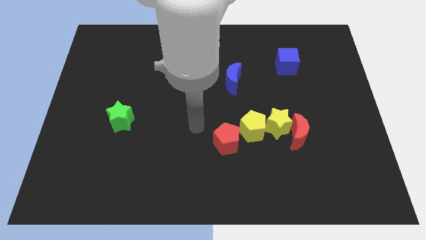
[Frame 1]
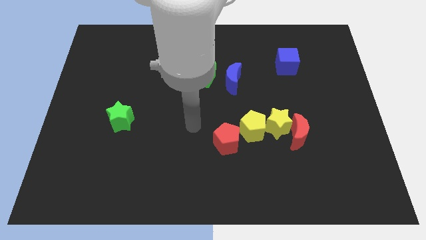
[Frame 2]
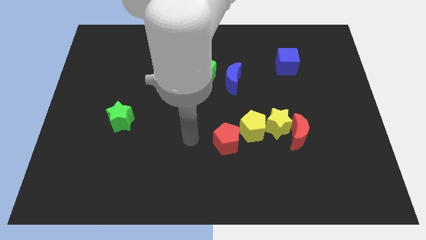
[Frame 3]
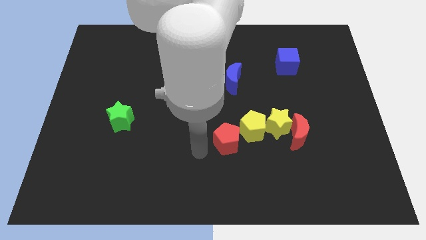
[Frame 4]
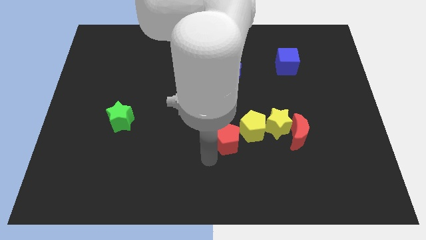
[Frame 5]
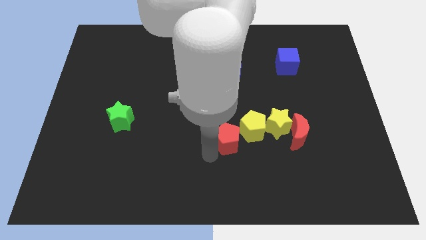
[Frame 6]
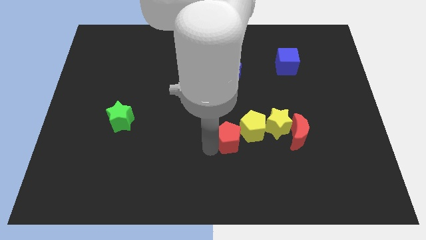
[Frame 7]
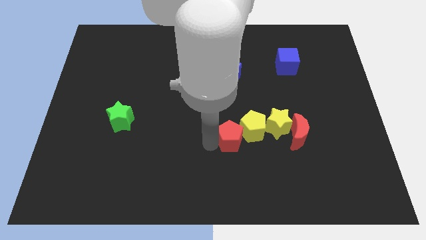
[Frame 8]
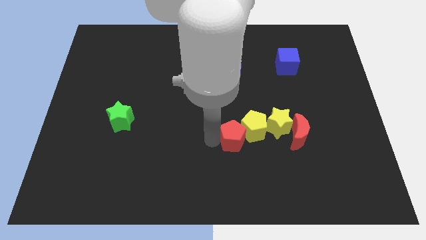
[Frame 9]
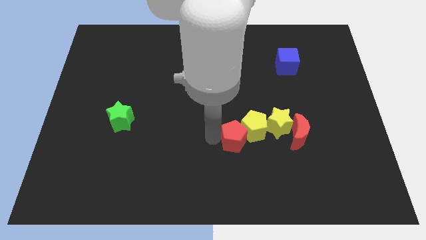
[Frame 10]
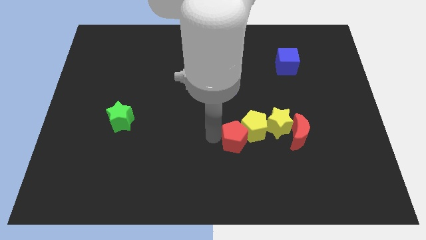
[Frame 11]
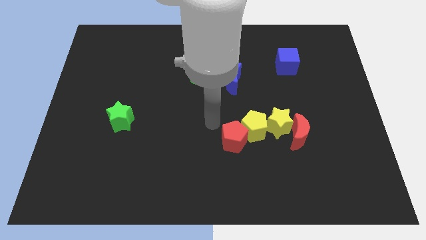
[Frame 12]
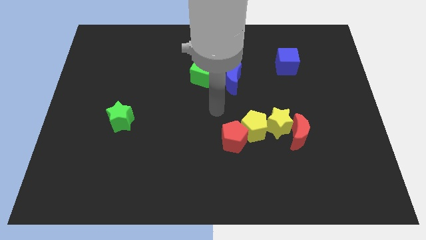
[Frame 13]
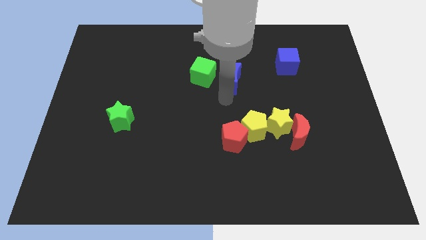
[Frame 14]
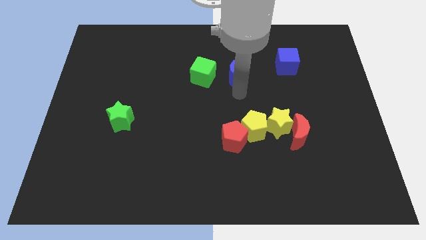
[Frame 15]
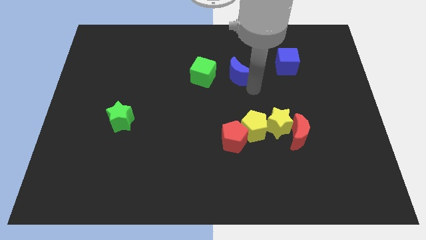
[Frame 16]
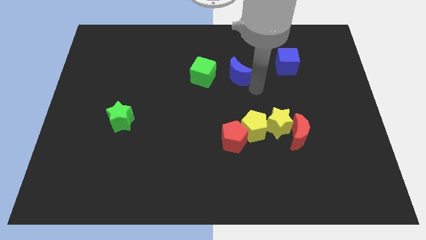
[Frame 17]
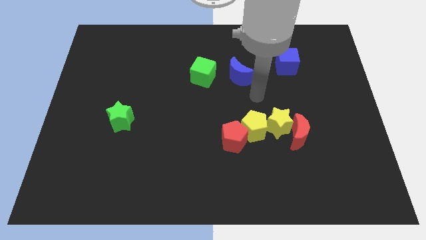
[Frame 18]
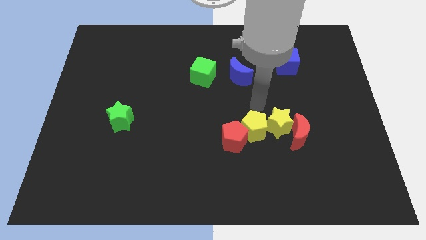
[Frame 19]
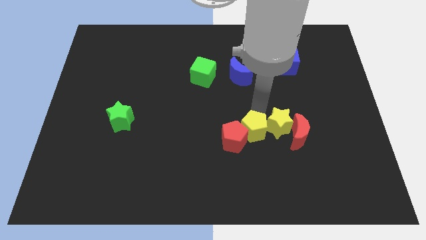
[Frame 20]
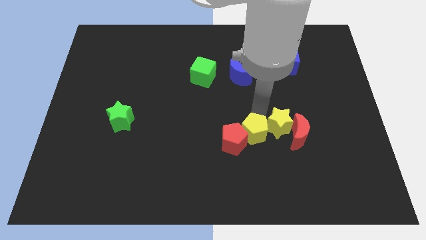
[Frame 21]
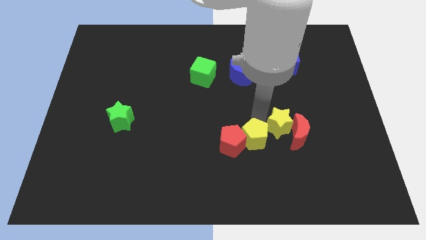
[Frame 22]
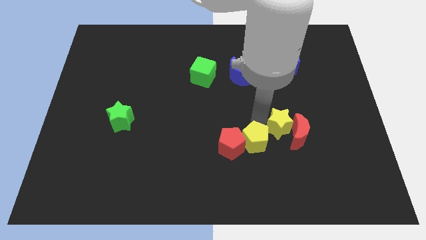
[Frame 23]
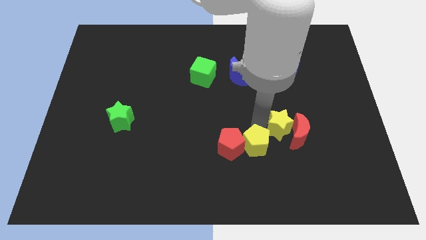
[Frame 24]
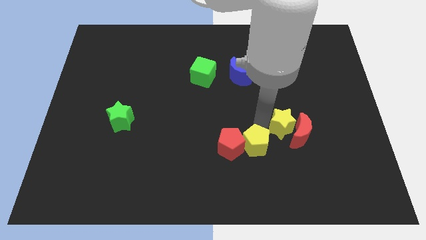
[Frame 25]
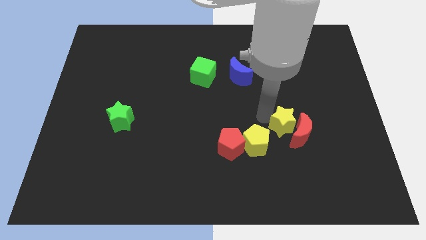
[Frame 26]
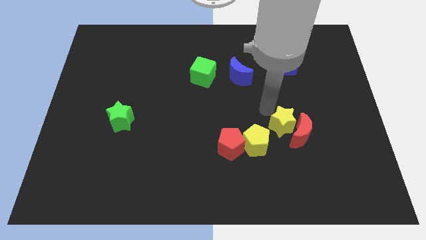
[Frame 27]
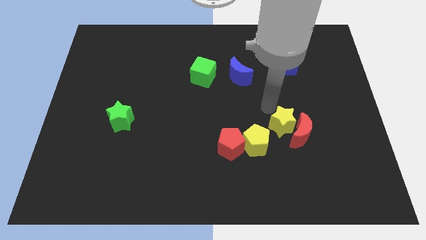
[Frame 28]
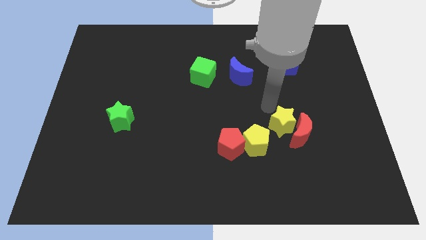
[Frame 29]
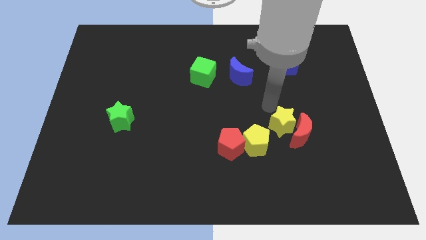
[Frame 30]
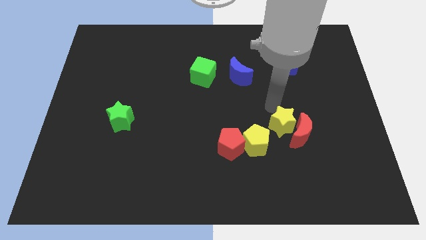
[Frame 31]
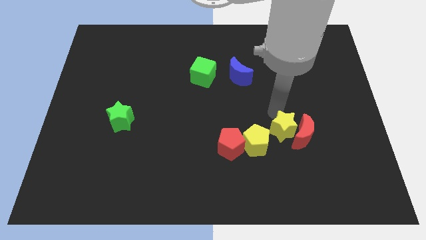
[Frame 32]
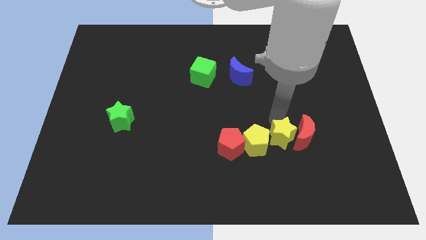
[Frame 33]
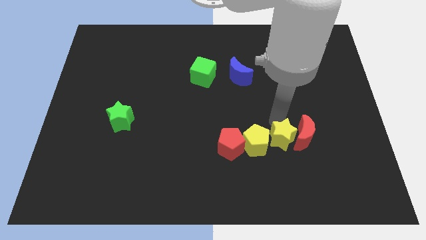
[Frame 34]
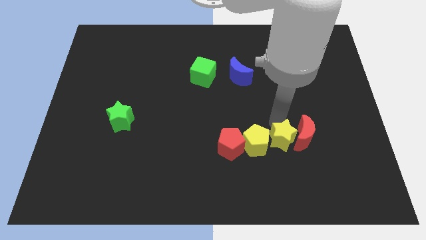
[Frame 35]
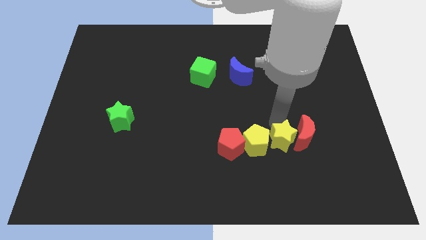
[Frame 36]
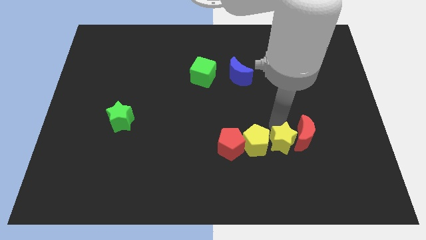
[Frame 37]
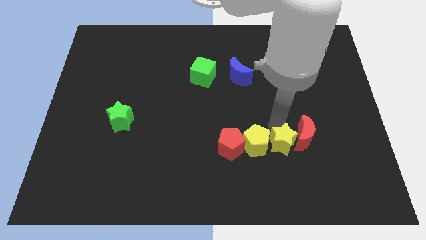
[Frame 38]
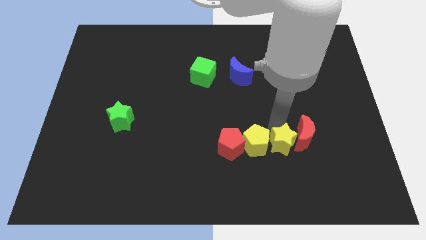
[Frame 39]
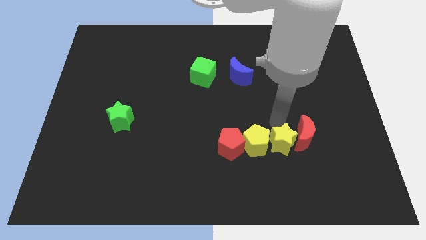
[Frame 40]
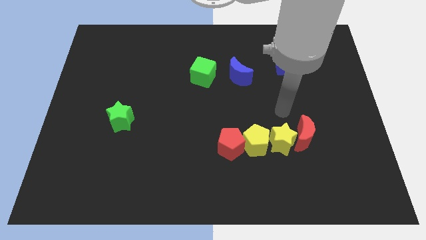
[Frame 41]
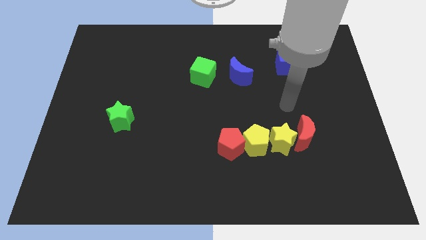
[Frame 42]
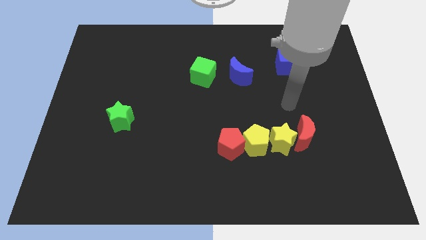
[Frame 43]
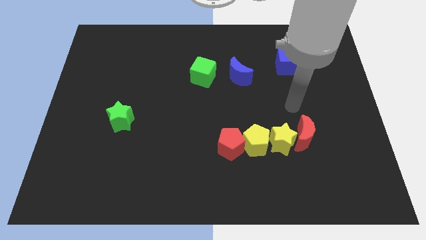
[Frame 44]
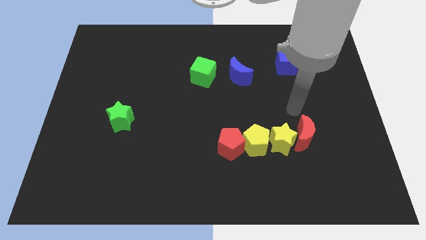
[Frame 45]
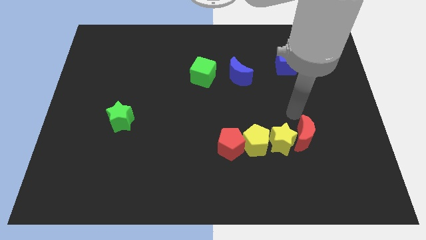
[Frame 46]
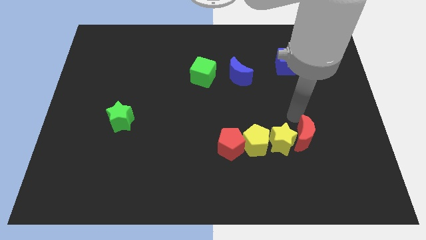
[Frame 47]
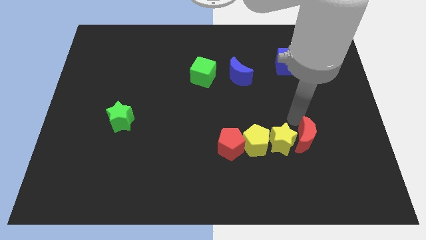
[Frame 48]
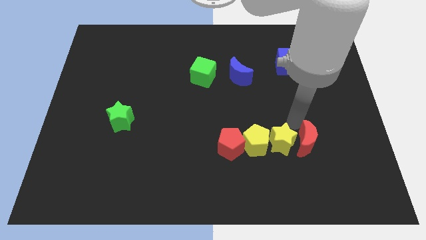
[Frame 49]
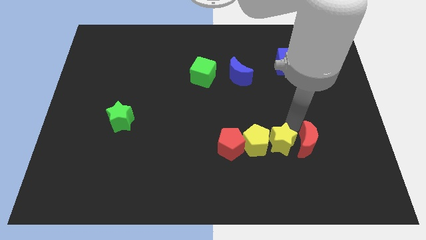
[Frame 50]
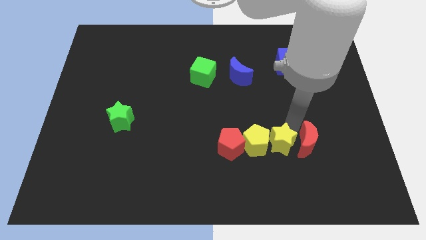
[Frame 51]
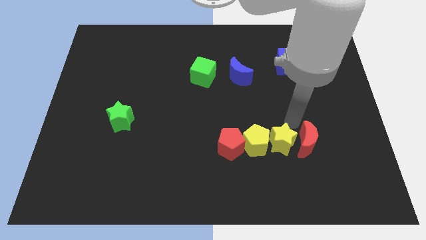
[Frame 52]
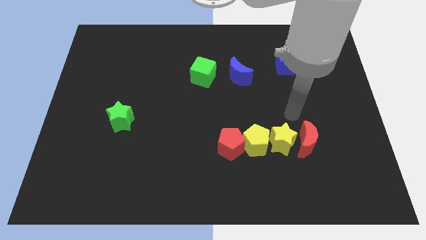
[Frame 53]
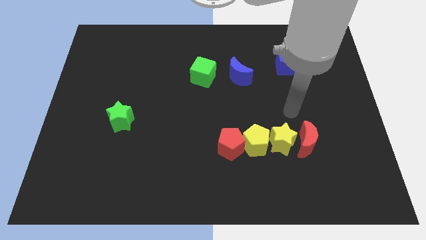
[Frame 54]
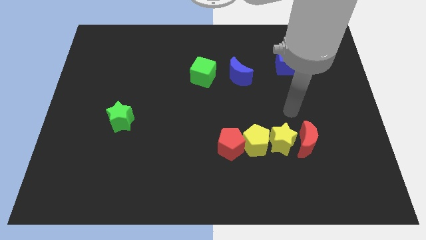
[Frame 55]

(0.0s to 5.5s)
arrange a group of blocks in a line properly

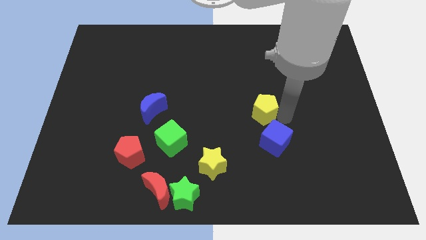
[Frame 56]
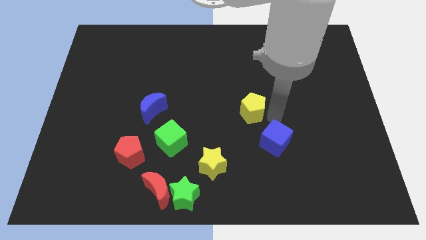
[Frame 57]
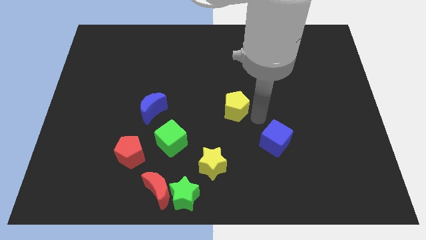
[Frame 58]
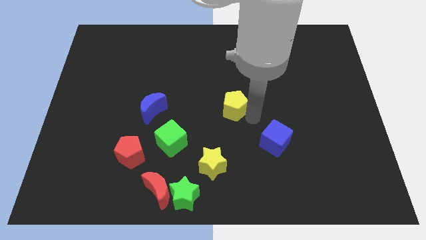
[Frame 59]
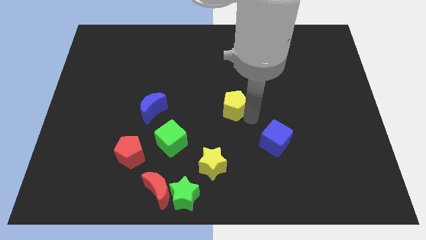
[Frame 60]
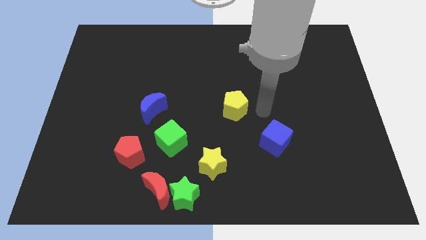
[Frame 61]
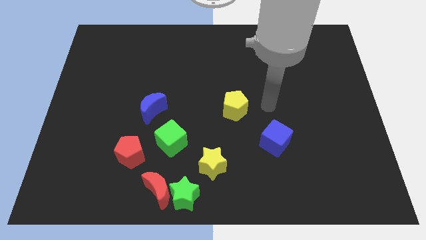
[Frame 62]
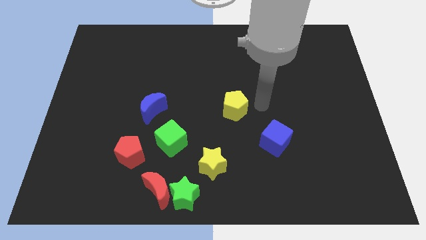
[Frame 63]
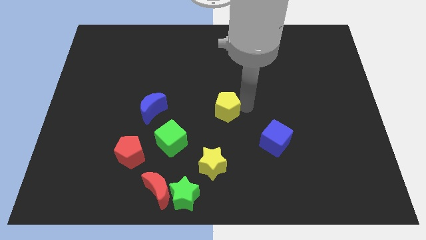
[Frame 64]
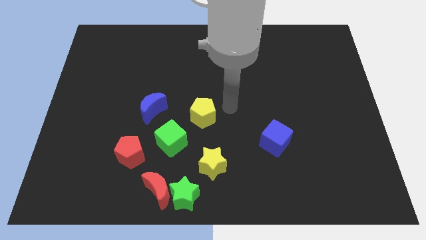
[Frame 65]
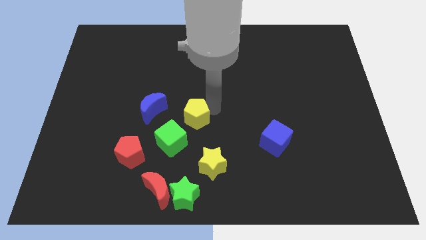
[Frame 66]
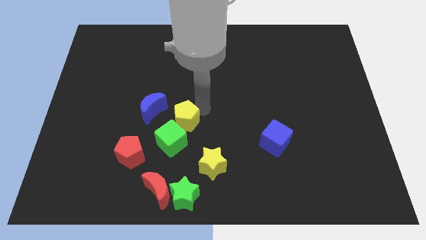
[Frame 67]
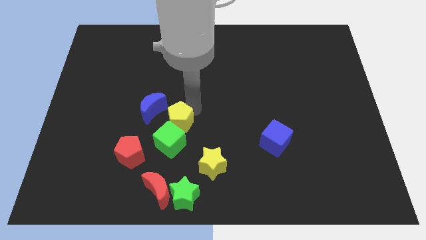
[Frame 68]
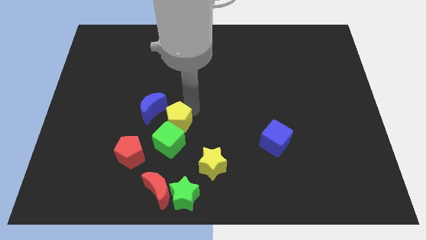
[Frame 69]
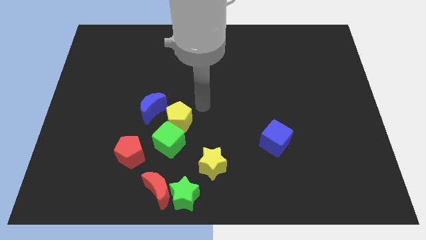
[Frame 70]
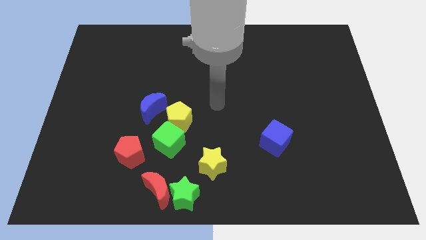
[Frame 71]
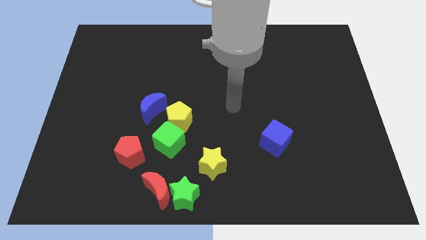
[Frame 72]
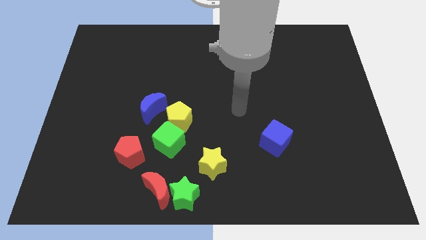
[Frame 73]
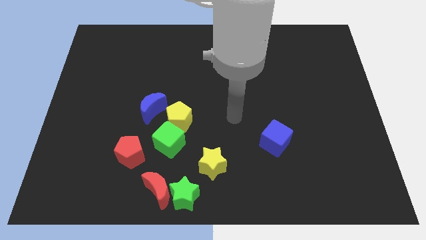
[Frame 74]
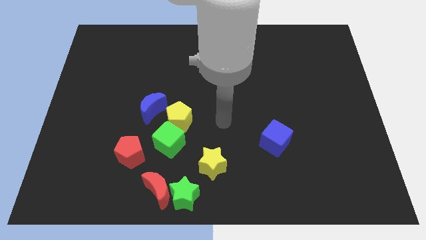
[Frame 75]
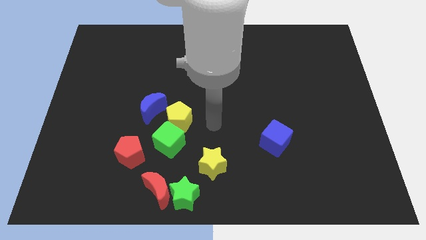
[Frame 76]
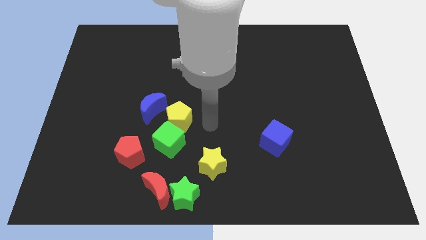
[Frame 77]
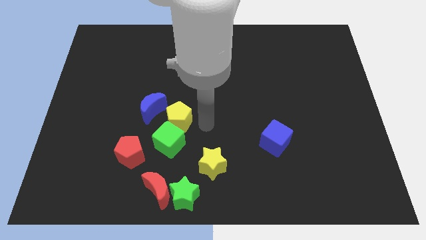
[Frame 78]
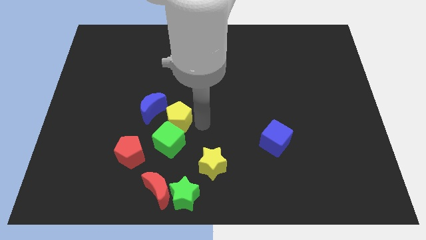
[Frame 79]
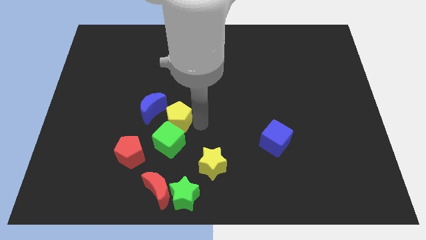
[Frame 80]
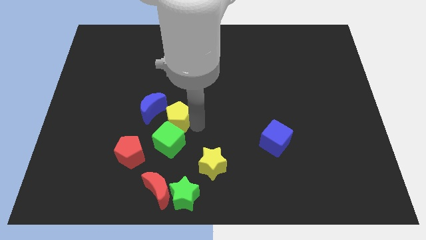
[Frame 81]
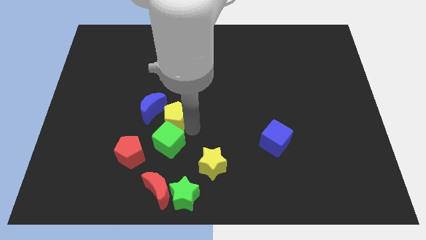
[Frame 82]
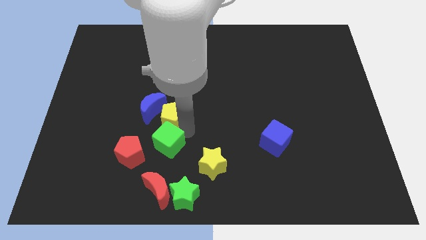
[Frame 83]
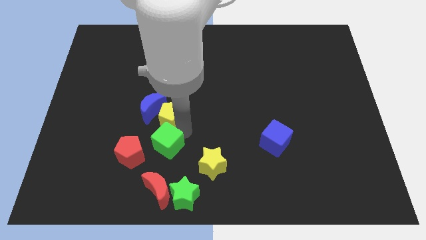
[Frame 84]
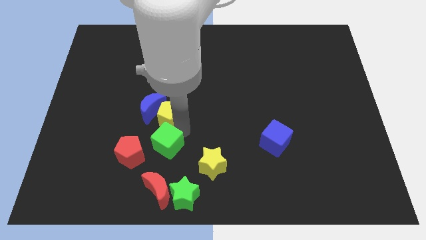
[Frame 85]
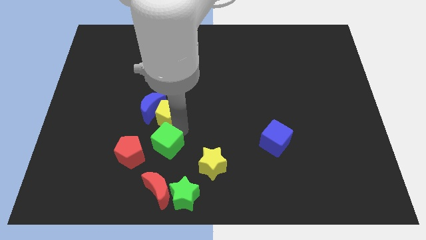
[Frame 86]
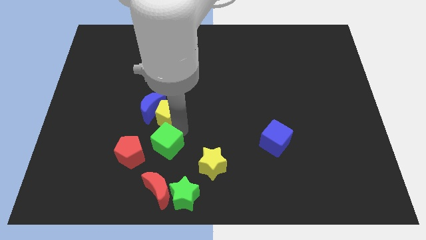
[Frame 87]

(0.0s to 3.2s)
place yellow pentagon above the green cube

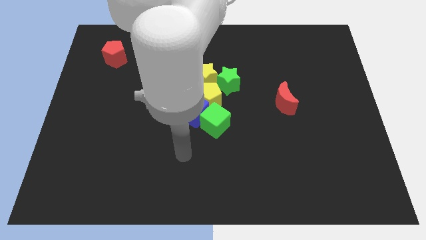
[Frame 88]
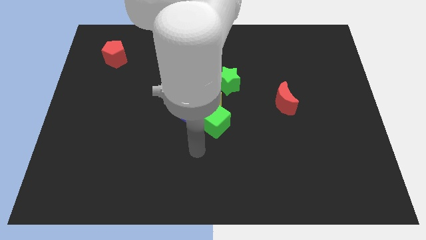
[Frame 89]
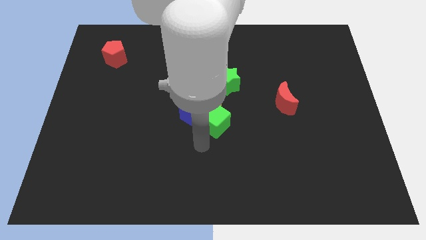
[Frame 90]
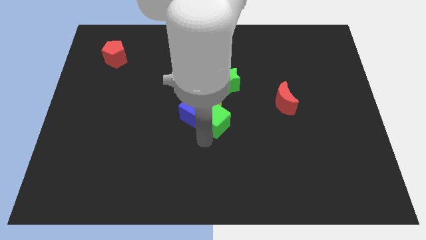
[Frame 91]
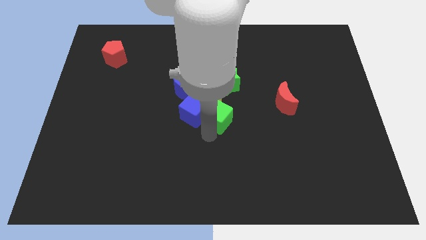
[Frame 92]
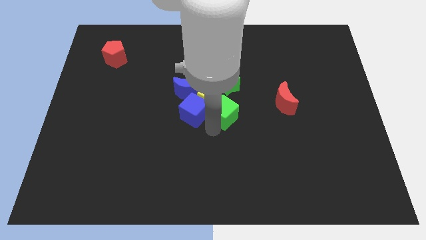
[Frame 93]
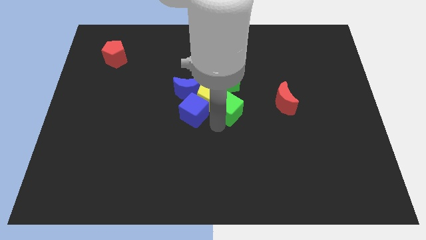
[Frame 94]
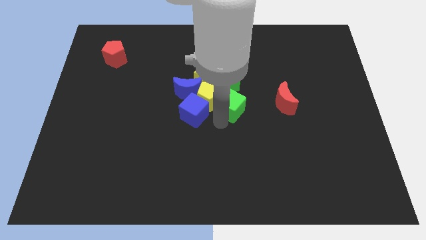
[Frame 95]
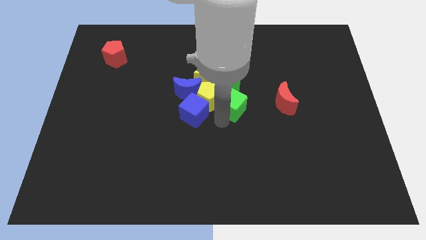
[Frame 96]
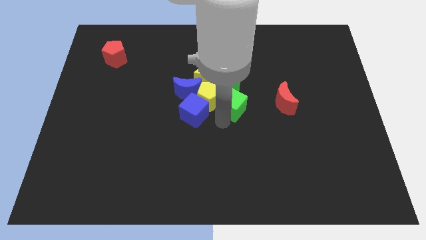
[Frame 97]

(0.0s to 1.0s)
separate green cube and blue cube
